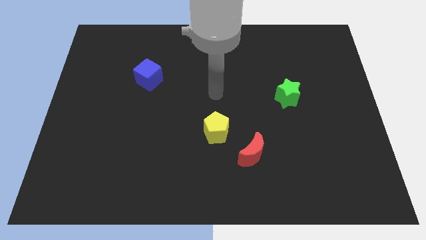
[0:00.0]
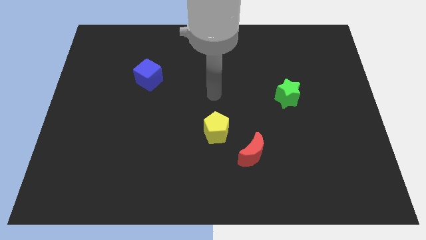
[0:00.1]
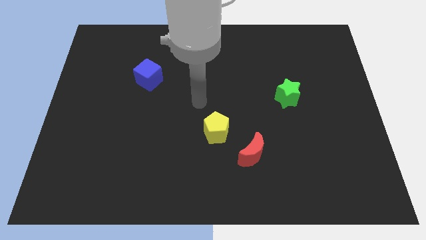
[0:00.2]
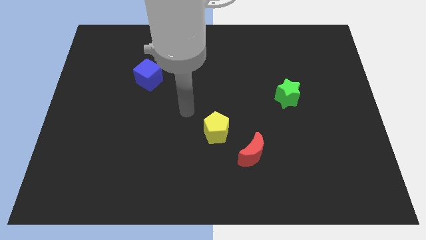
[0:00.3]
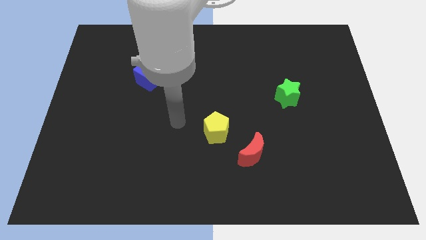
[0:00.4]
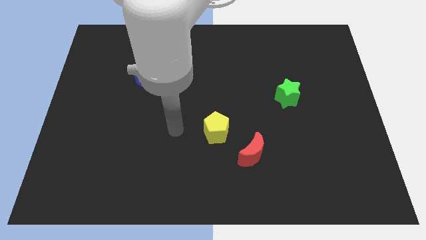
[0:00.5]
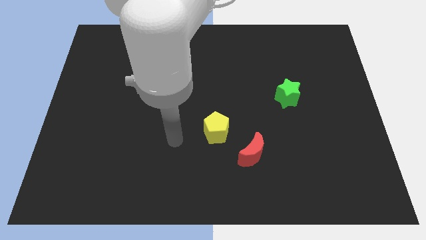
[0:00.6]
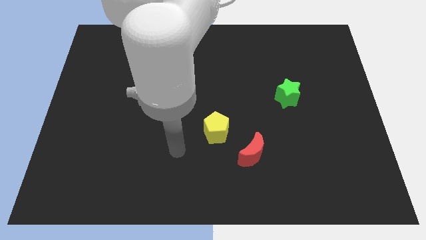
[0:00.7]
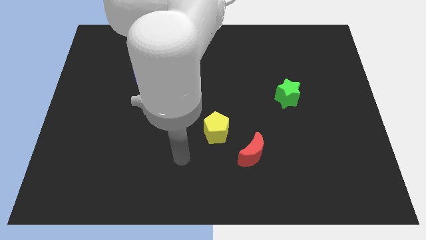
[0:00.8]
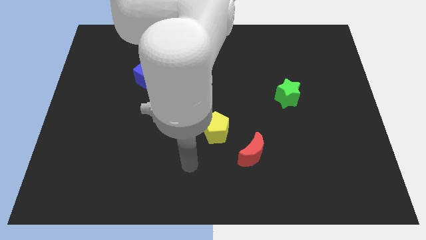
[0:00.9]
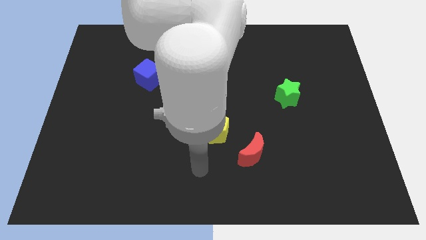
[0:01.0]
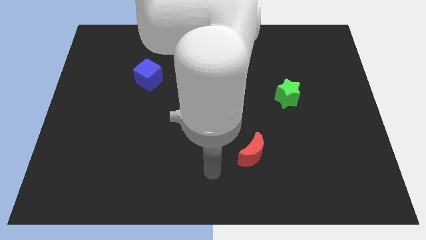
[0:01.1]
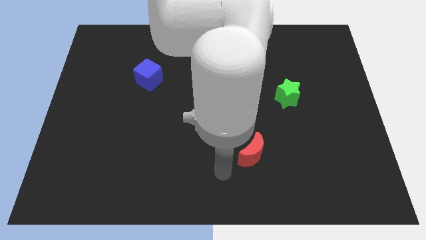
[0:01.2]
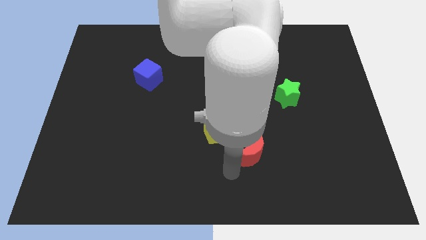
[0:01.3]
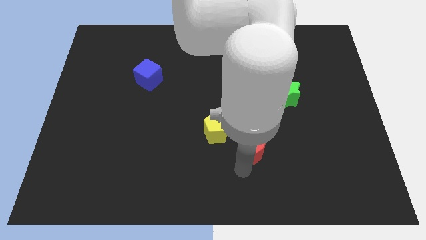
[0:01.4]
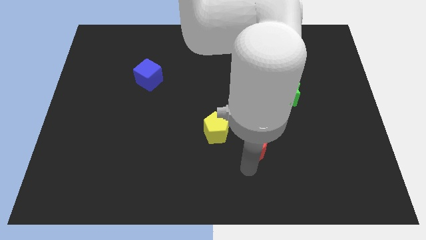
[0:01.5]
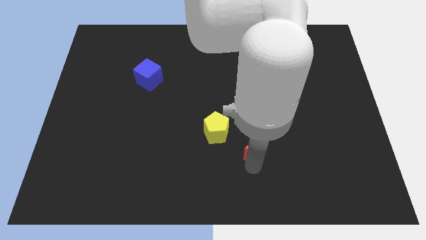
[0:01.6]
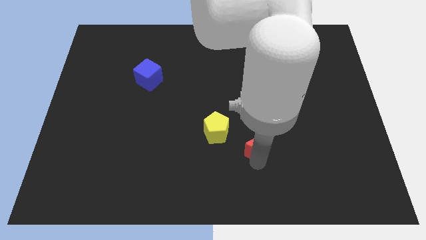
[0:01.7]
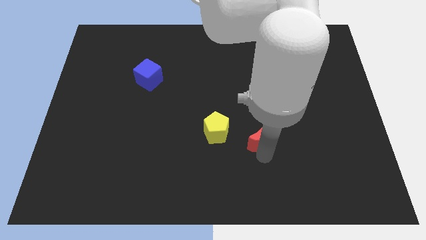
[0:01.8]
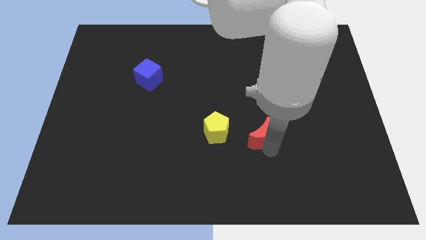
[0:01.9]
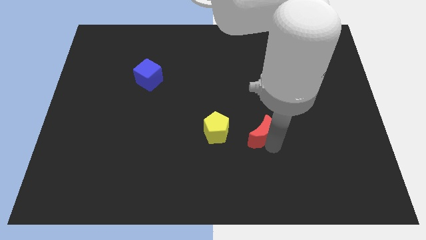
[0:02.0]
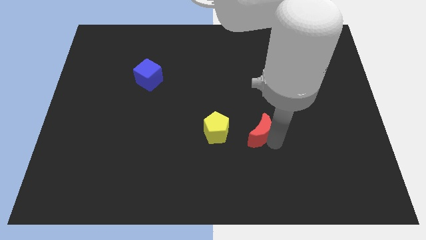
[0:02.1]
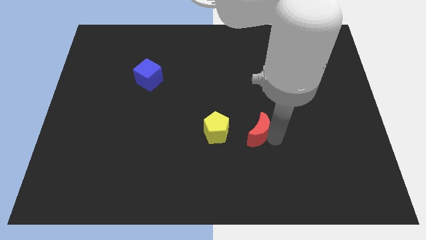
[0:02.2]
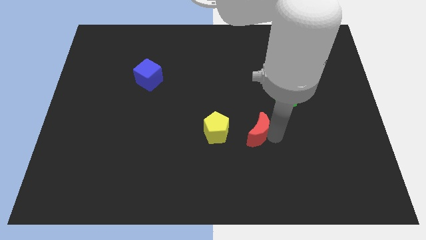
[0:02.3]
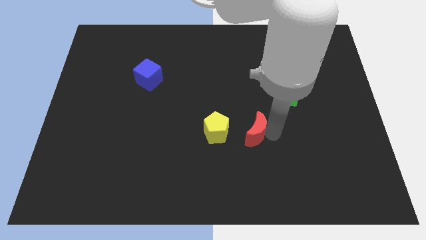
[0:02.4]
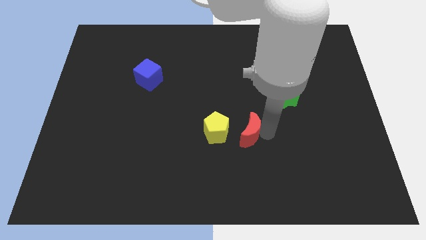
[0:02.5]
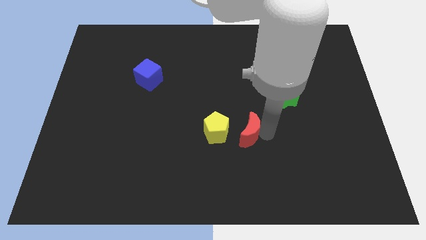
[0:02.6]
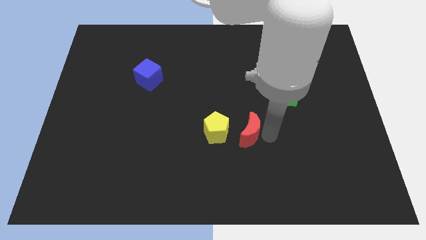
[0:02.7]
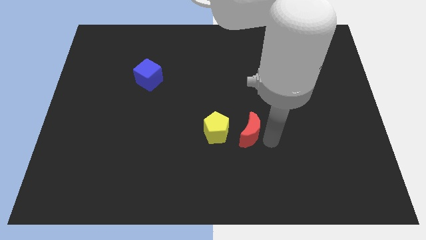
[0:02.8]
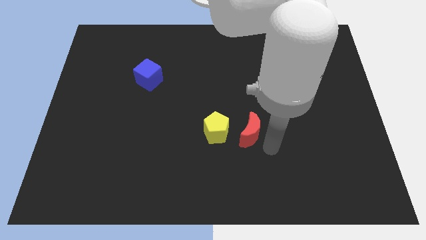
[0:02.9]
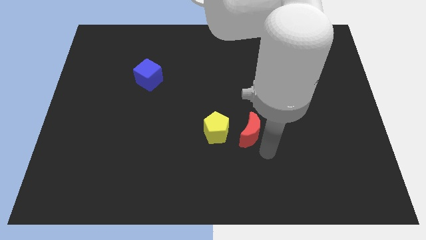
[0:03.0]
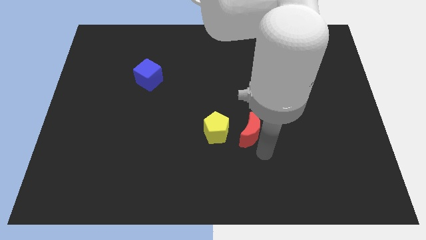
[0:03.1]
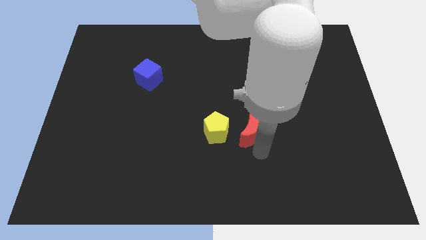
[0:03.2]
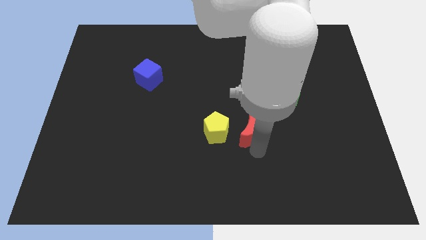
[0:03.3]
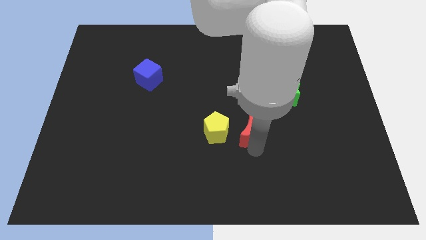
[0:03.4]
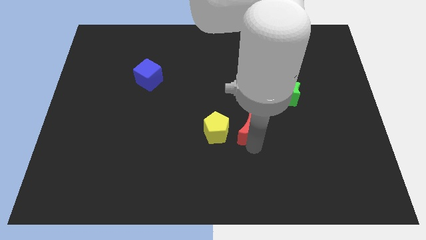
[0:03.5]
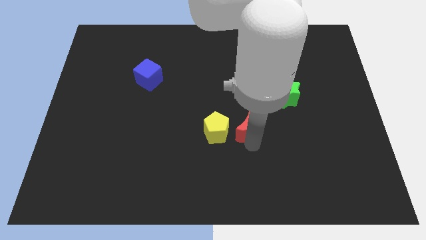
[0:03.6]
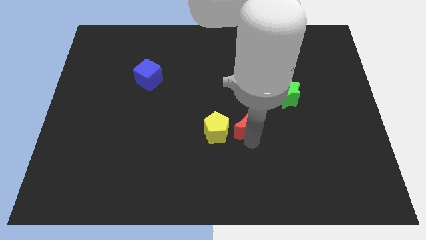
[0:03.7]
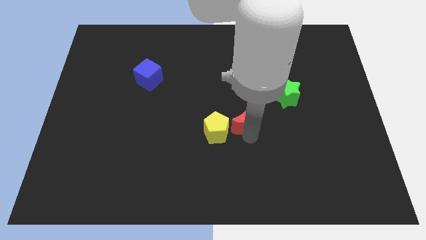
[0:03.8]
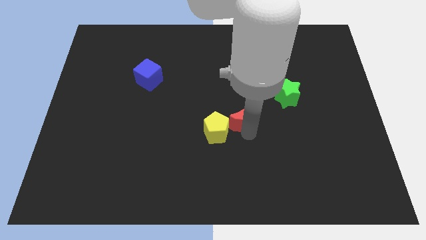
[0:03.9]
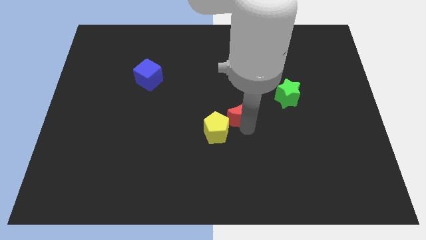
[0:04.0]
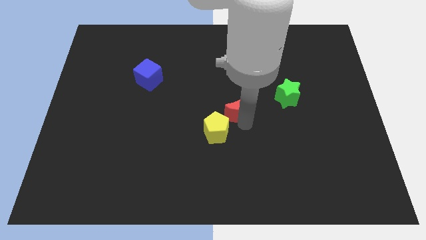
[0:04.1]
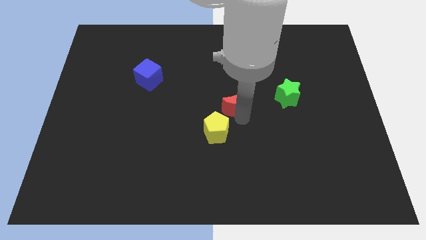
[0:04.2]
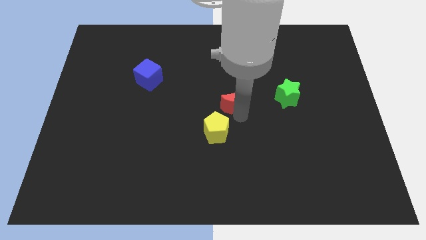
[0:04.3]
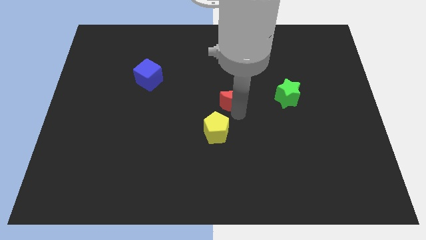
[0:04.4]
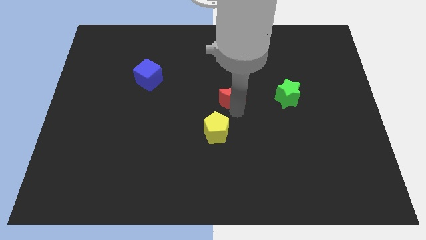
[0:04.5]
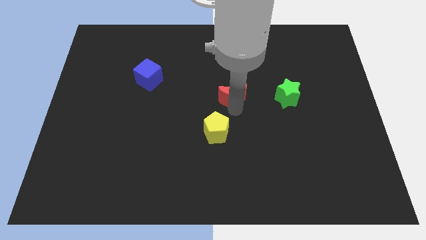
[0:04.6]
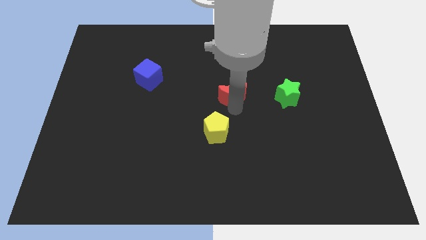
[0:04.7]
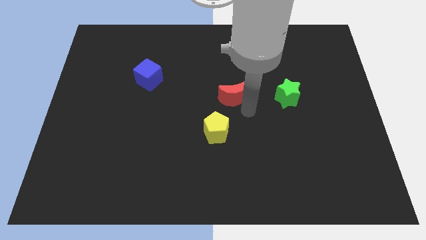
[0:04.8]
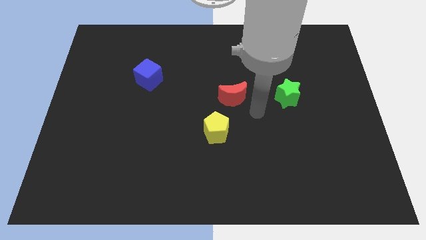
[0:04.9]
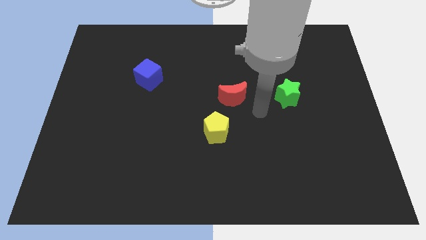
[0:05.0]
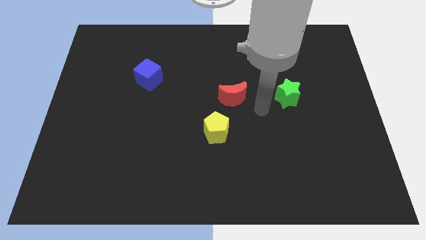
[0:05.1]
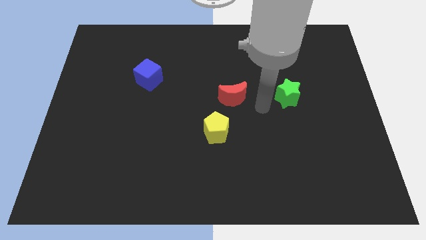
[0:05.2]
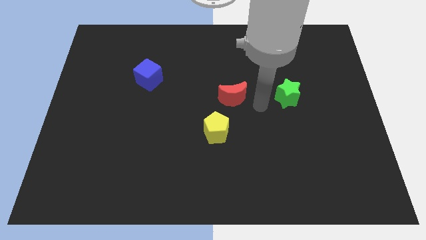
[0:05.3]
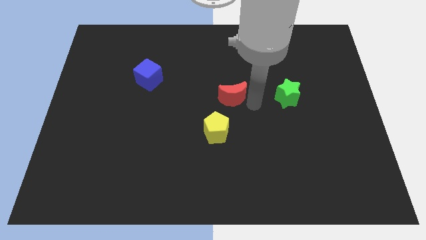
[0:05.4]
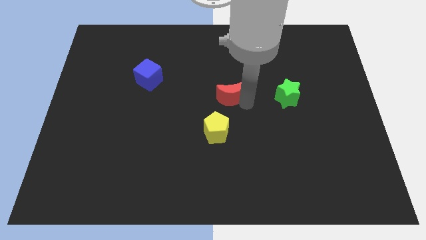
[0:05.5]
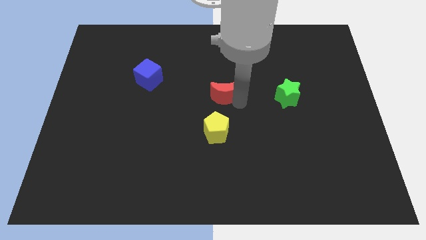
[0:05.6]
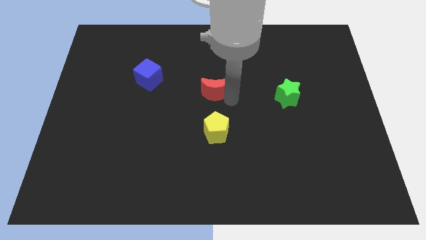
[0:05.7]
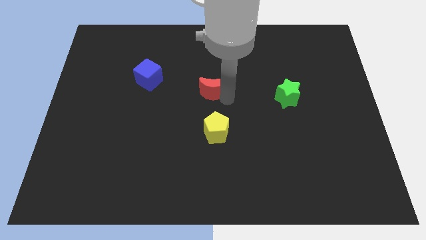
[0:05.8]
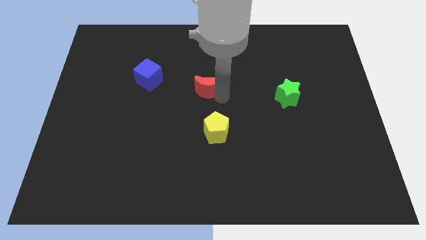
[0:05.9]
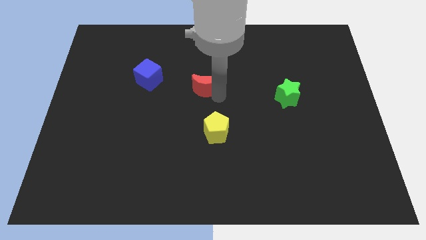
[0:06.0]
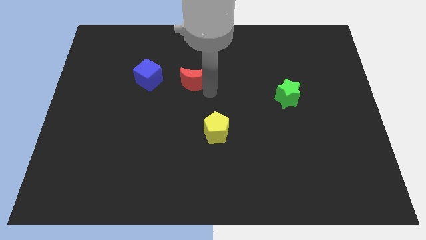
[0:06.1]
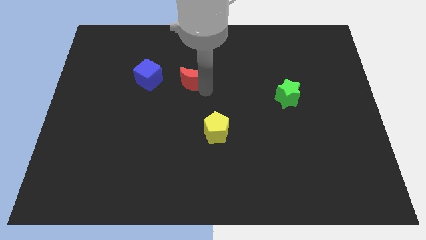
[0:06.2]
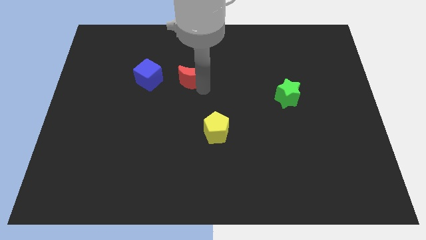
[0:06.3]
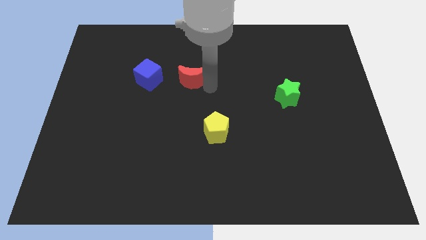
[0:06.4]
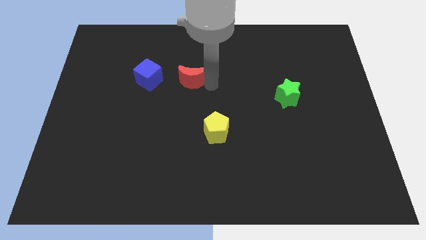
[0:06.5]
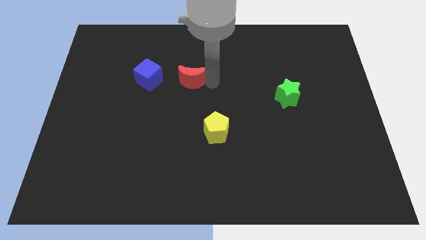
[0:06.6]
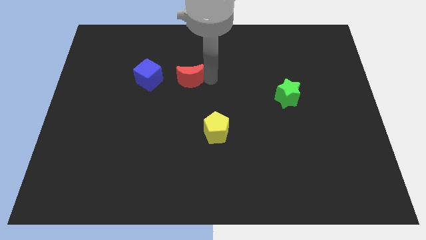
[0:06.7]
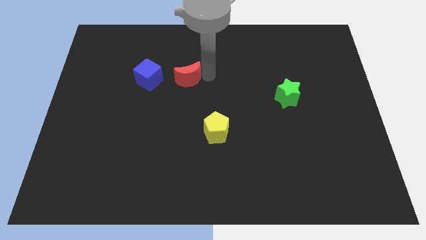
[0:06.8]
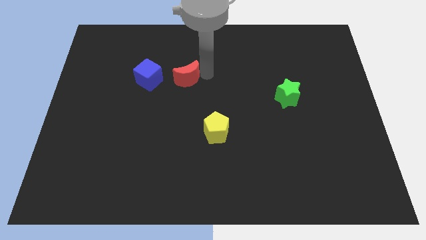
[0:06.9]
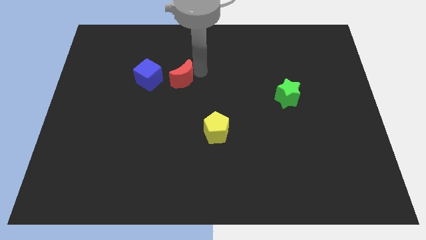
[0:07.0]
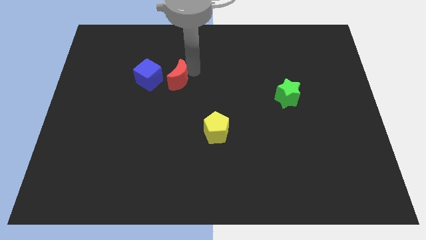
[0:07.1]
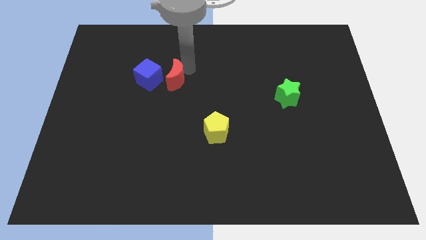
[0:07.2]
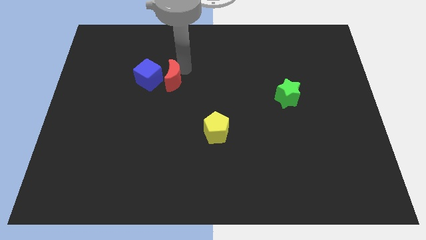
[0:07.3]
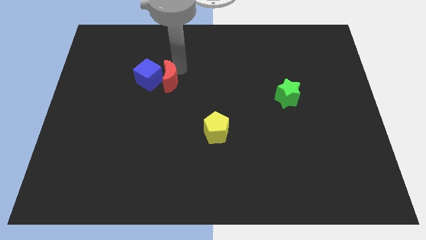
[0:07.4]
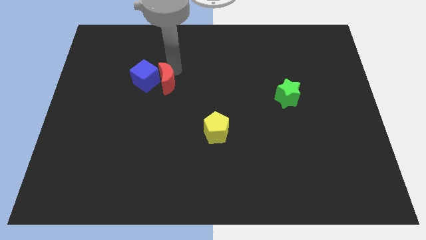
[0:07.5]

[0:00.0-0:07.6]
move the red block close to the cube

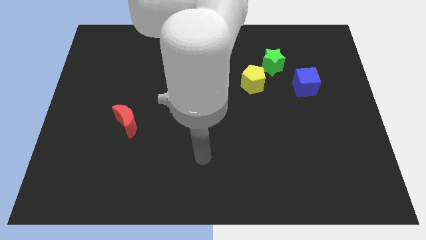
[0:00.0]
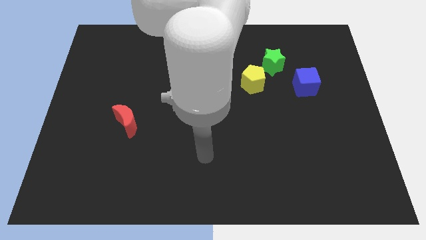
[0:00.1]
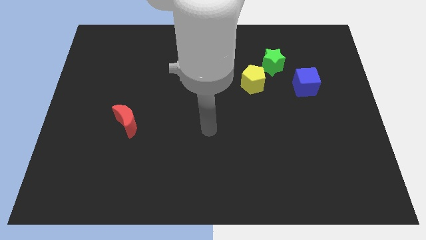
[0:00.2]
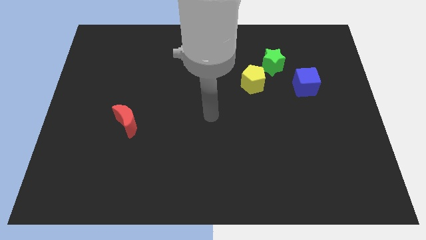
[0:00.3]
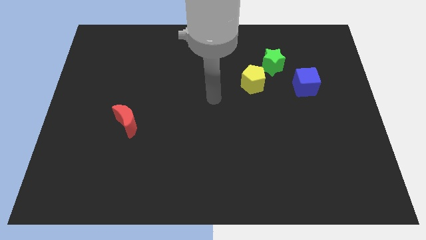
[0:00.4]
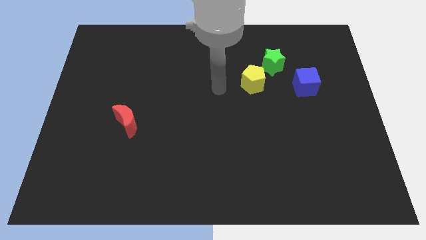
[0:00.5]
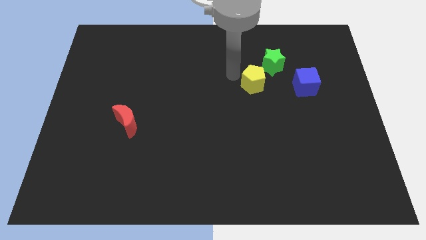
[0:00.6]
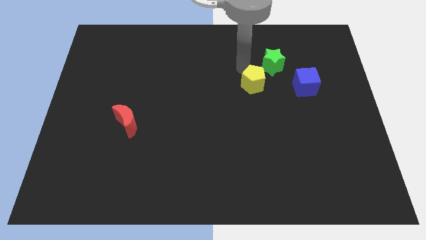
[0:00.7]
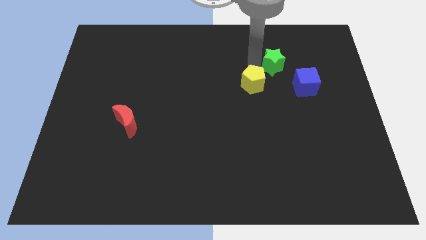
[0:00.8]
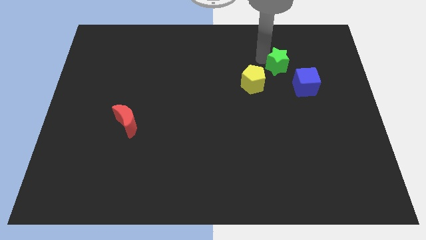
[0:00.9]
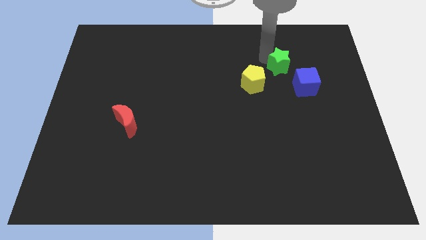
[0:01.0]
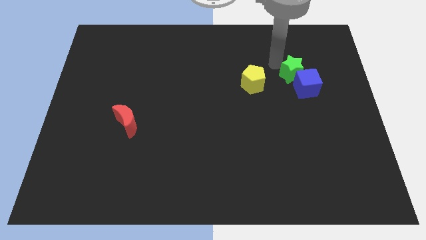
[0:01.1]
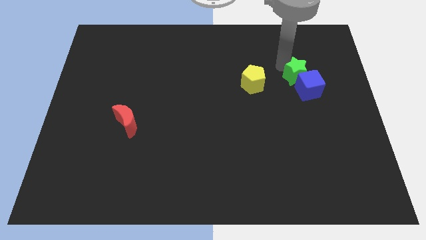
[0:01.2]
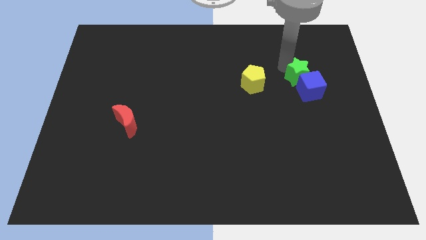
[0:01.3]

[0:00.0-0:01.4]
push the star next to the blue block
